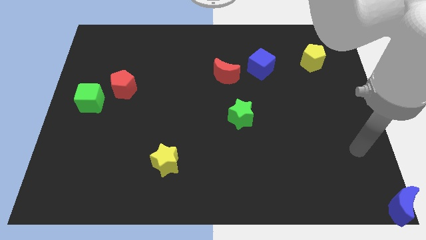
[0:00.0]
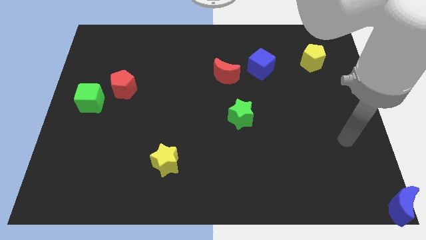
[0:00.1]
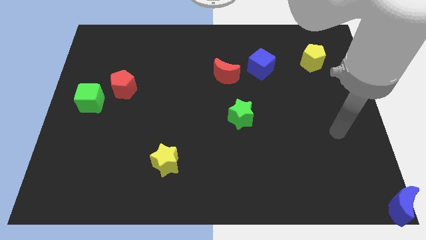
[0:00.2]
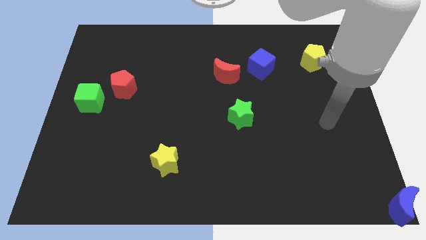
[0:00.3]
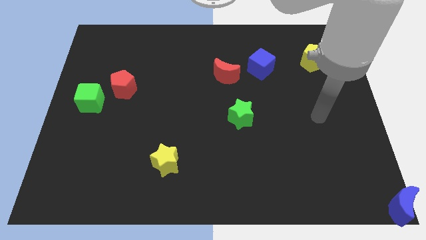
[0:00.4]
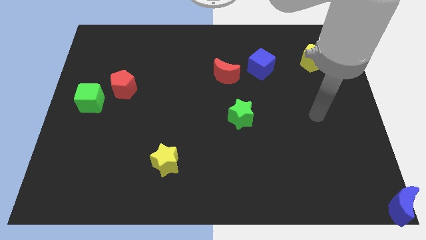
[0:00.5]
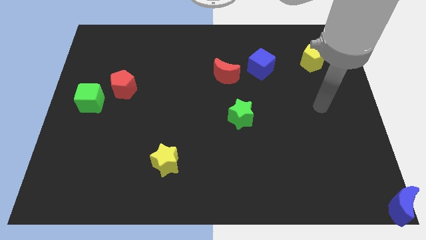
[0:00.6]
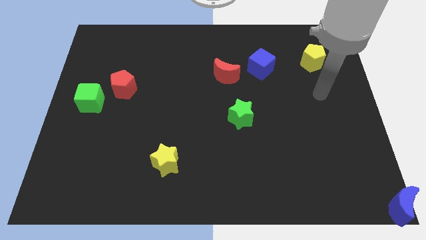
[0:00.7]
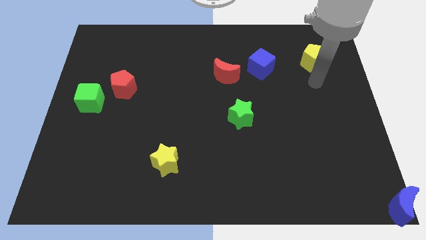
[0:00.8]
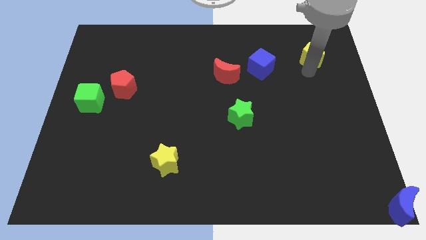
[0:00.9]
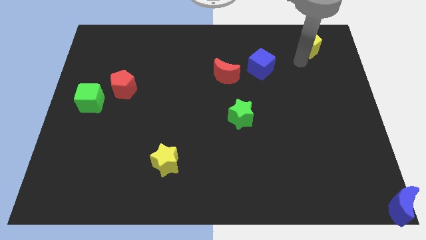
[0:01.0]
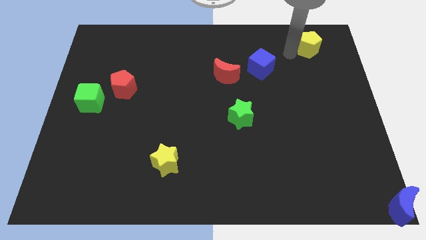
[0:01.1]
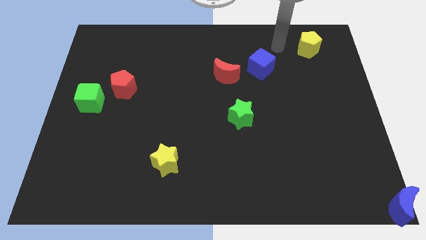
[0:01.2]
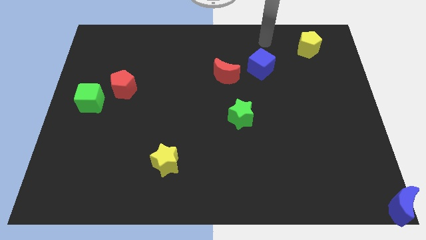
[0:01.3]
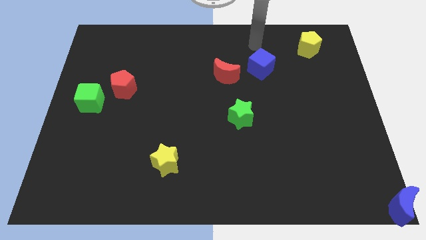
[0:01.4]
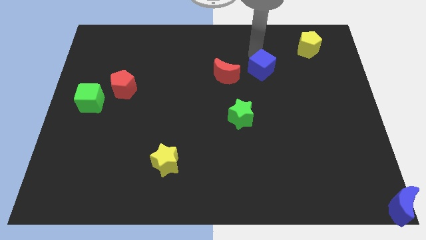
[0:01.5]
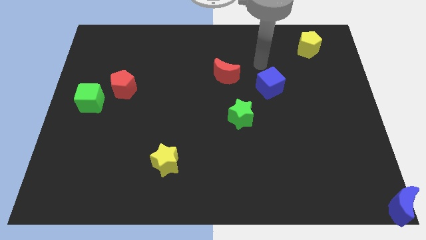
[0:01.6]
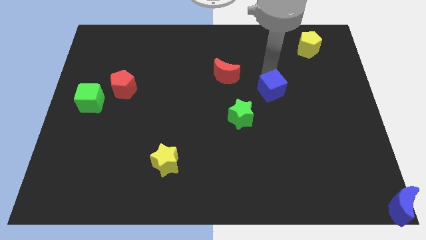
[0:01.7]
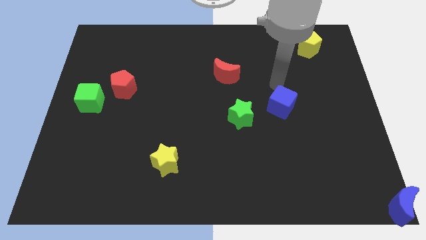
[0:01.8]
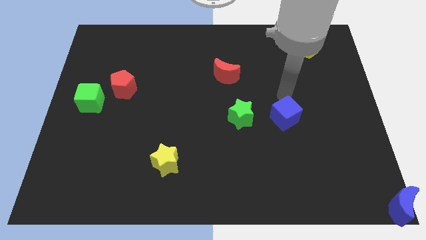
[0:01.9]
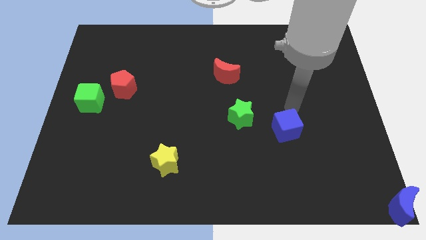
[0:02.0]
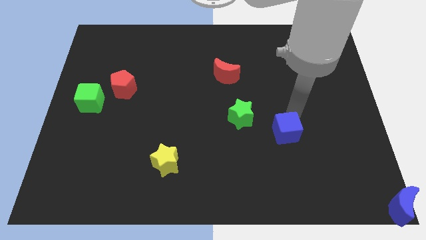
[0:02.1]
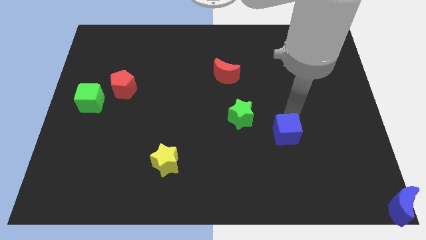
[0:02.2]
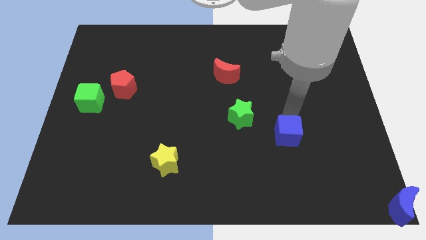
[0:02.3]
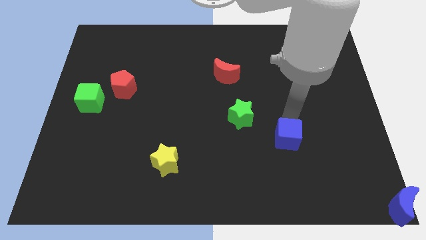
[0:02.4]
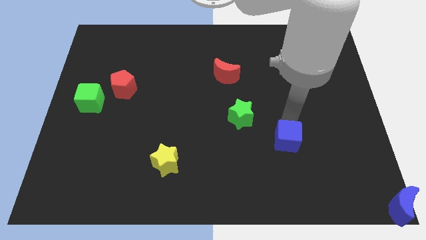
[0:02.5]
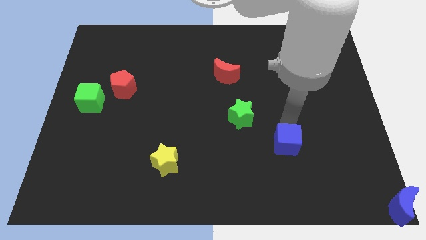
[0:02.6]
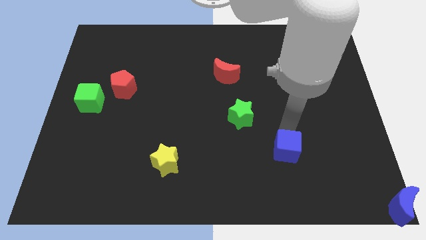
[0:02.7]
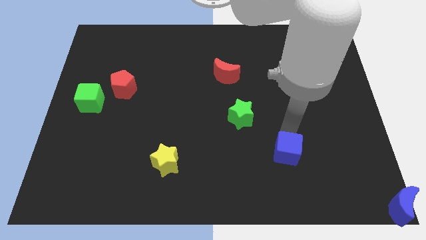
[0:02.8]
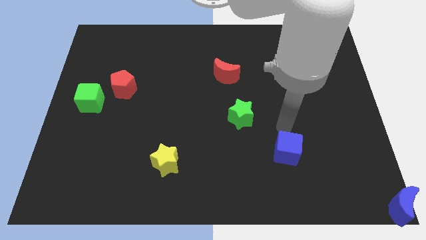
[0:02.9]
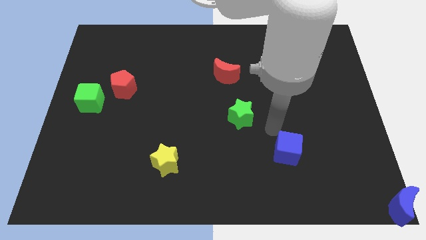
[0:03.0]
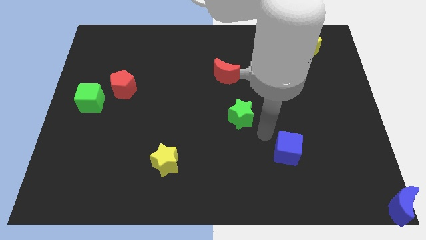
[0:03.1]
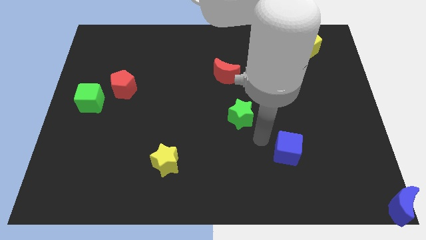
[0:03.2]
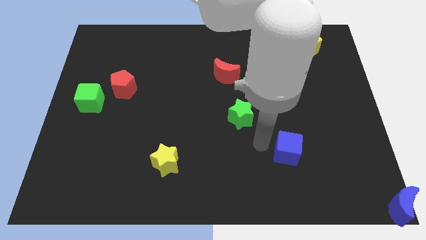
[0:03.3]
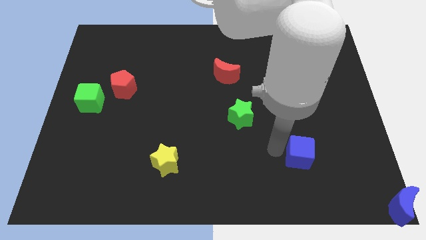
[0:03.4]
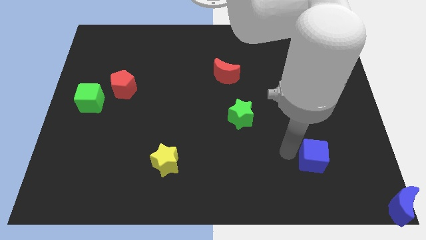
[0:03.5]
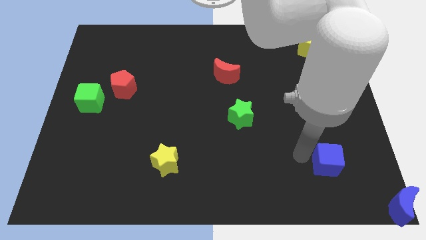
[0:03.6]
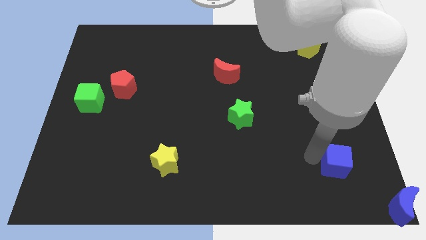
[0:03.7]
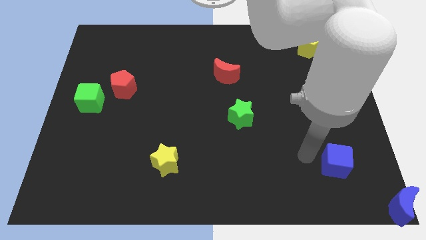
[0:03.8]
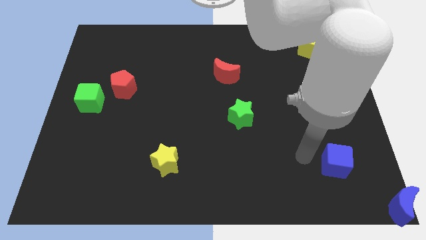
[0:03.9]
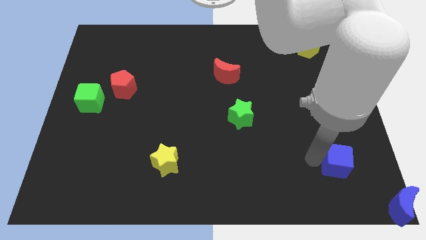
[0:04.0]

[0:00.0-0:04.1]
place the blue cube in between the green star blue moon

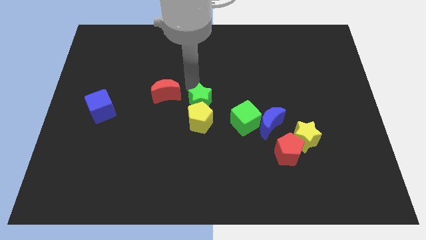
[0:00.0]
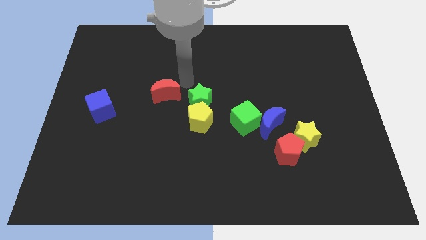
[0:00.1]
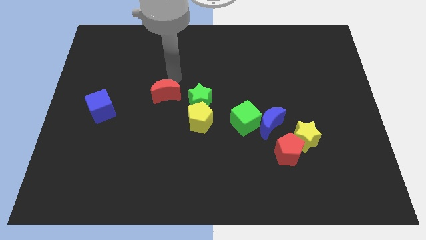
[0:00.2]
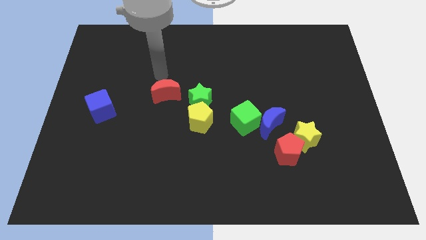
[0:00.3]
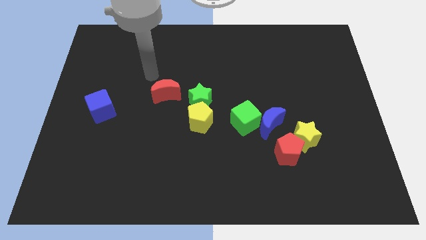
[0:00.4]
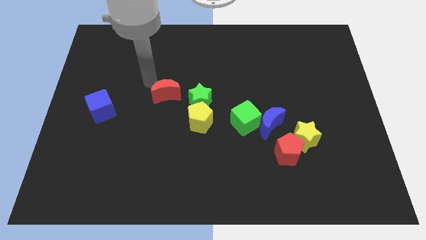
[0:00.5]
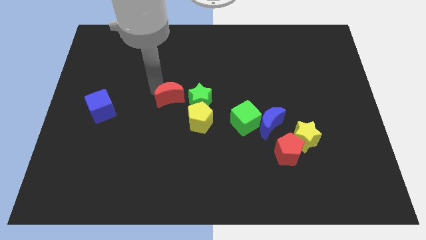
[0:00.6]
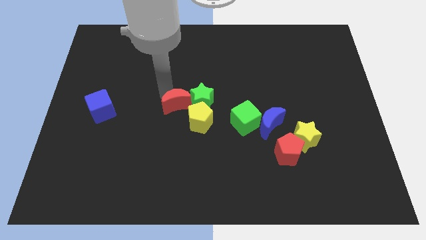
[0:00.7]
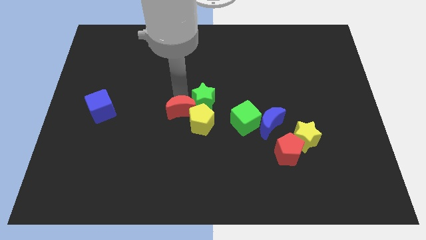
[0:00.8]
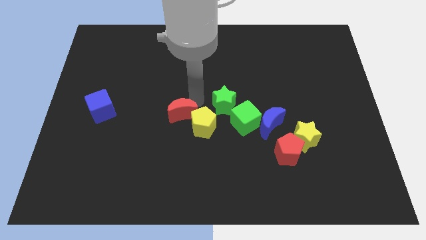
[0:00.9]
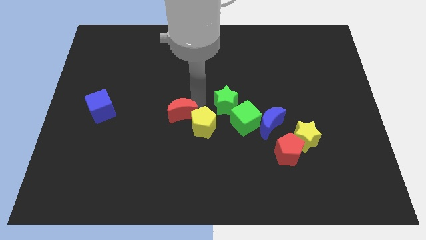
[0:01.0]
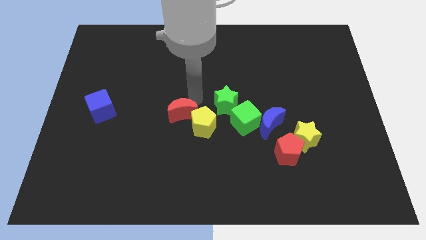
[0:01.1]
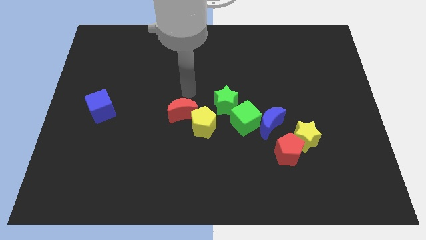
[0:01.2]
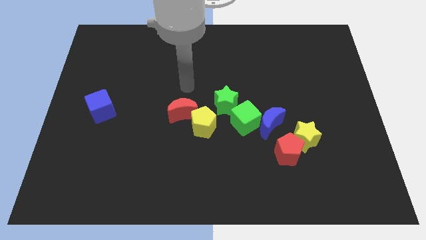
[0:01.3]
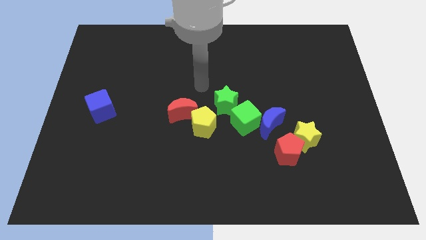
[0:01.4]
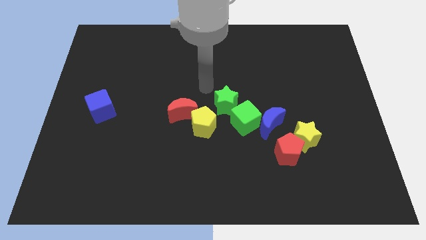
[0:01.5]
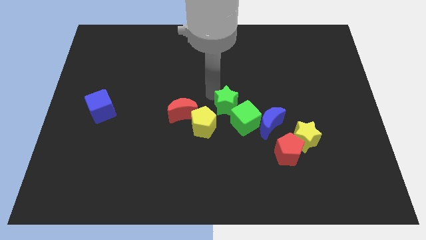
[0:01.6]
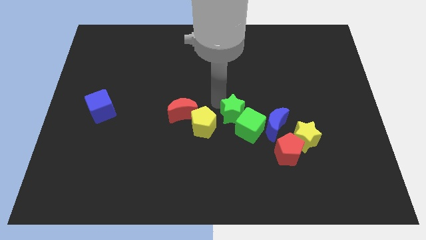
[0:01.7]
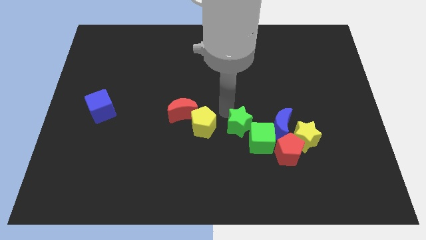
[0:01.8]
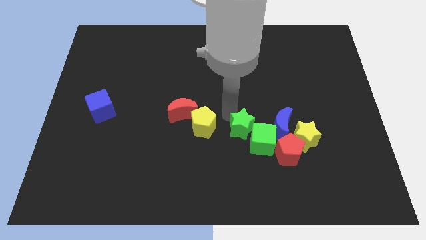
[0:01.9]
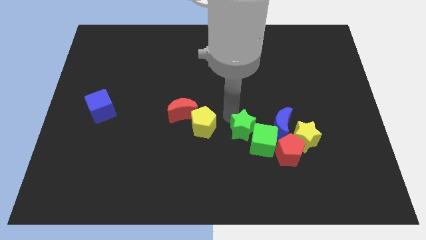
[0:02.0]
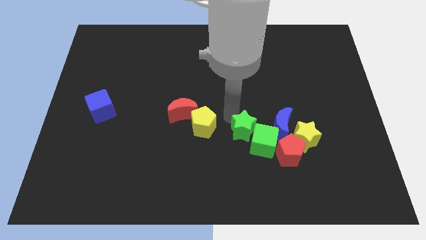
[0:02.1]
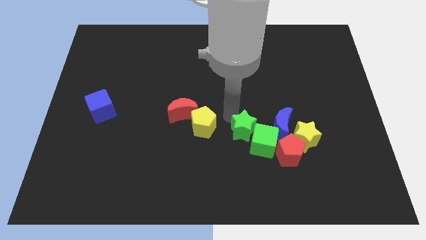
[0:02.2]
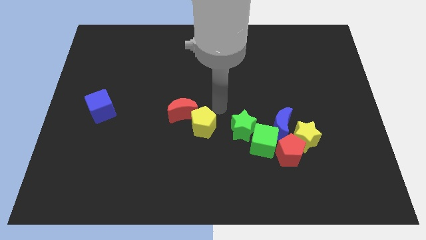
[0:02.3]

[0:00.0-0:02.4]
push the green star and green cube slightly downwards of the board

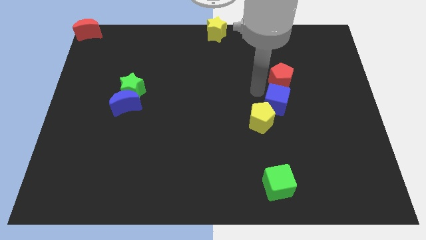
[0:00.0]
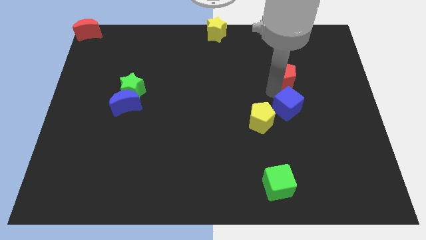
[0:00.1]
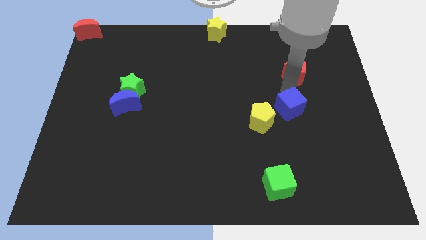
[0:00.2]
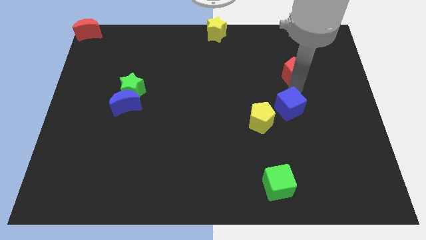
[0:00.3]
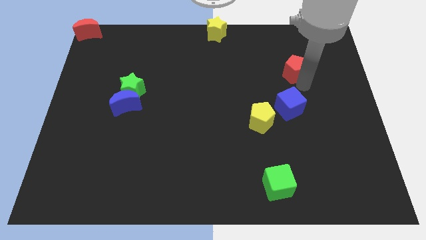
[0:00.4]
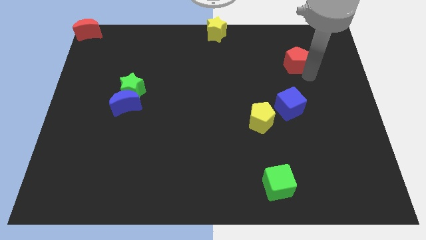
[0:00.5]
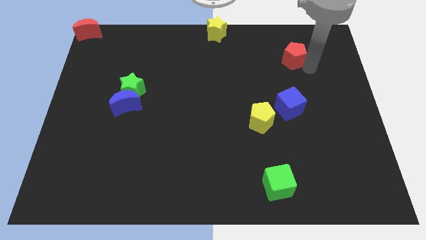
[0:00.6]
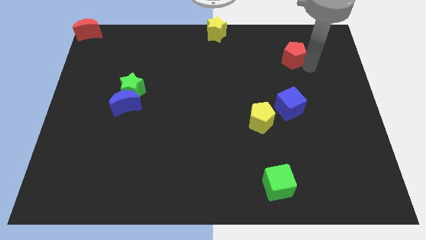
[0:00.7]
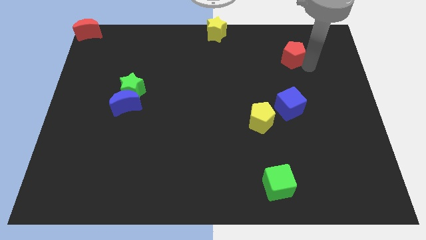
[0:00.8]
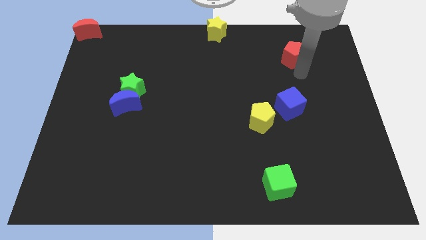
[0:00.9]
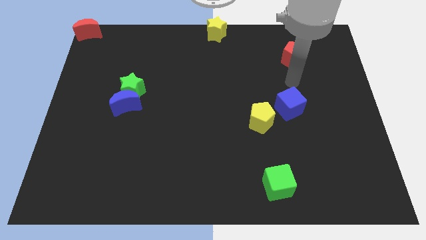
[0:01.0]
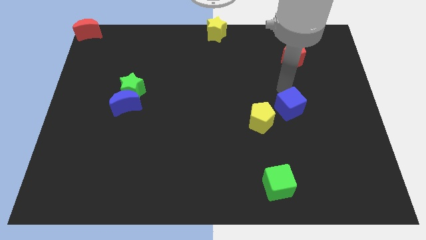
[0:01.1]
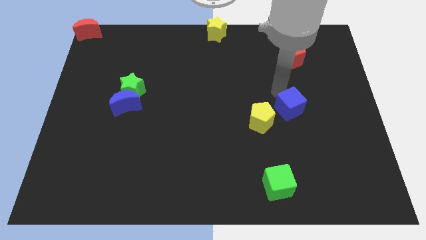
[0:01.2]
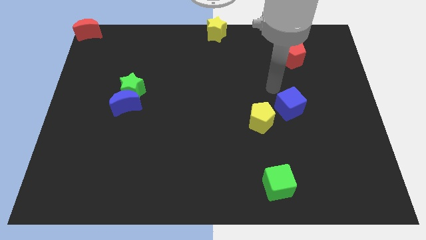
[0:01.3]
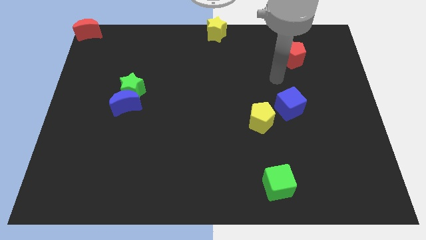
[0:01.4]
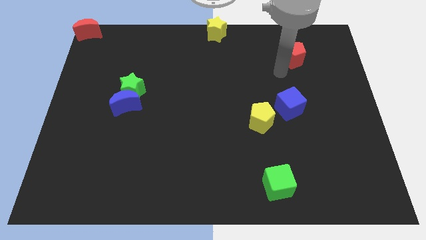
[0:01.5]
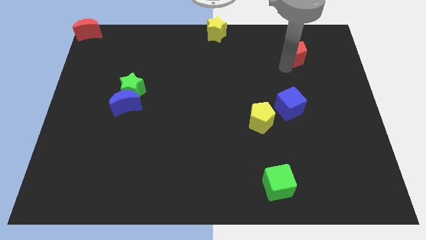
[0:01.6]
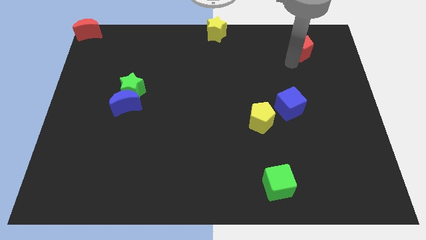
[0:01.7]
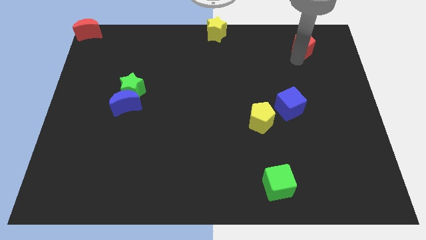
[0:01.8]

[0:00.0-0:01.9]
move the red pentagon away from the blue cube

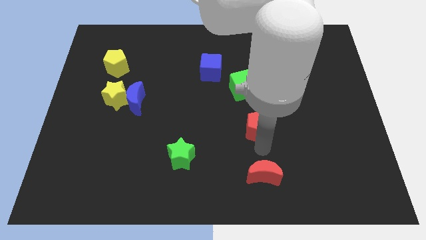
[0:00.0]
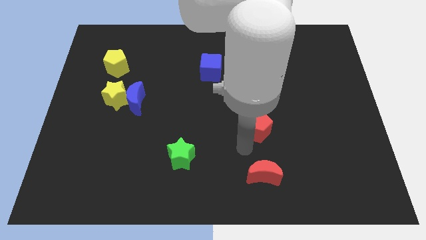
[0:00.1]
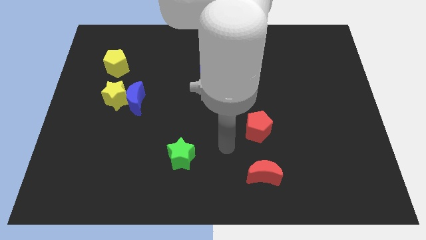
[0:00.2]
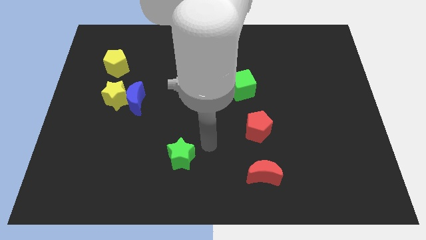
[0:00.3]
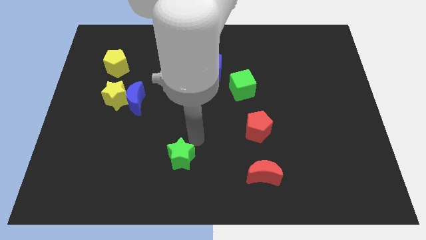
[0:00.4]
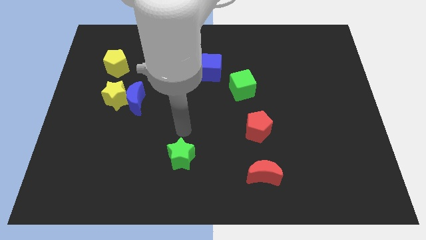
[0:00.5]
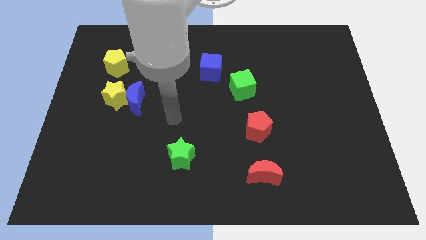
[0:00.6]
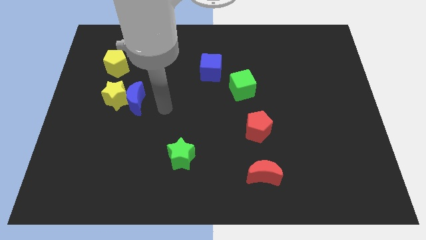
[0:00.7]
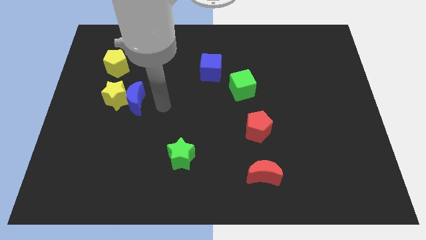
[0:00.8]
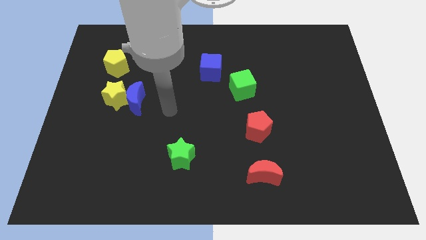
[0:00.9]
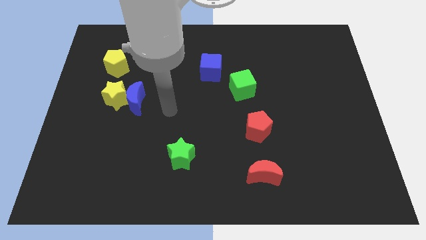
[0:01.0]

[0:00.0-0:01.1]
move arm away from red pentagon
